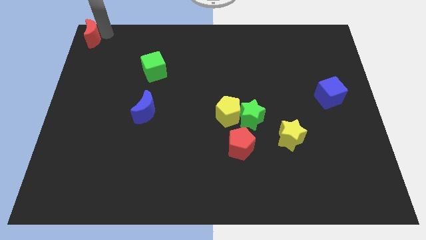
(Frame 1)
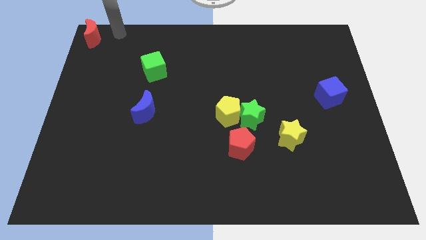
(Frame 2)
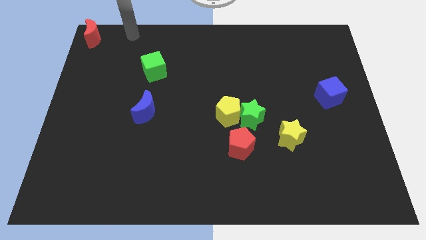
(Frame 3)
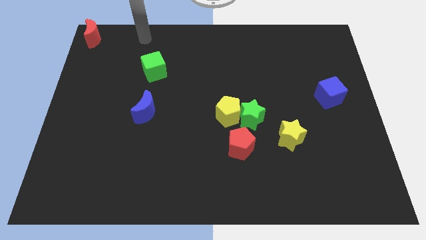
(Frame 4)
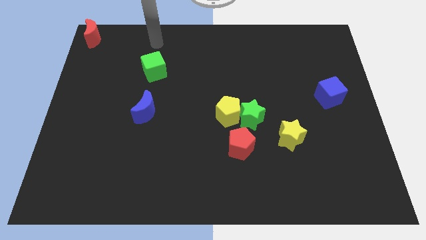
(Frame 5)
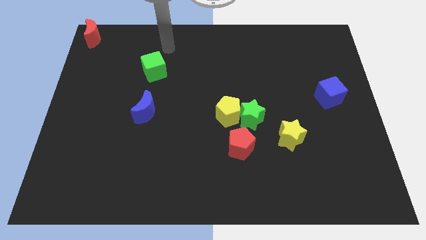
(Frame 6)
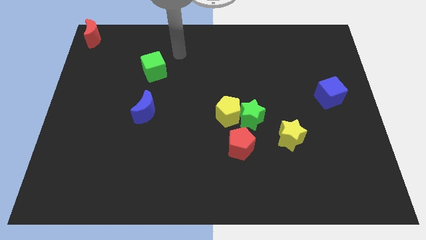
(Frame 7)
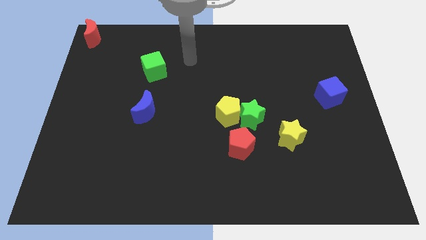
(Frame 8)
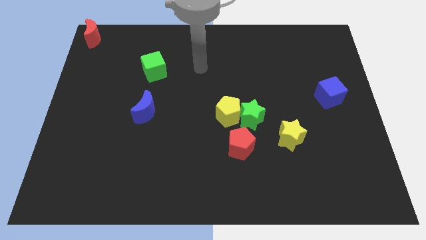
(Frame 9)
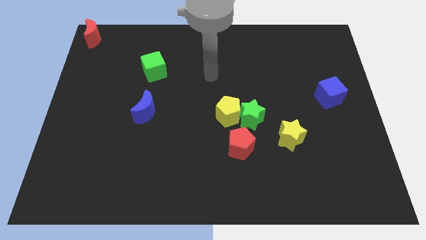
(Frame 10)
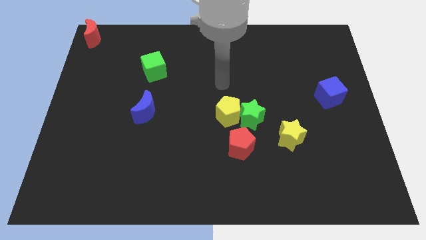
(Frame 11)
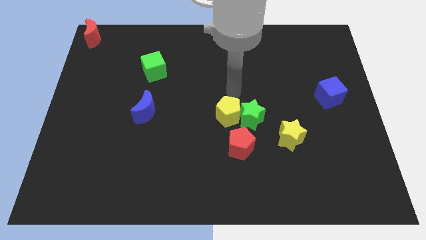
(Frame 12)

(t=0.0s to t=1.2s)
move your arm away from red moon

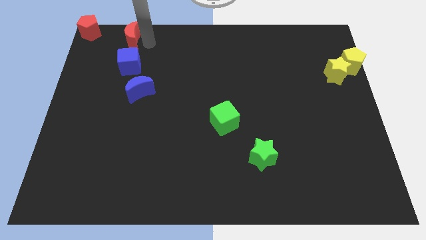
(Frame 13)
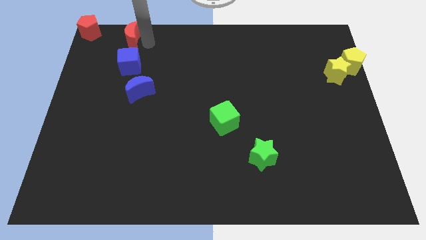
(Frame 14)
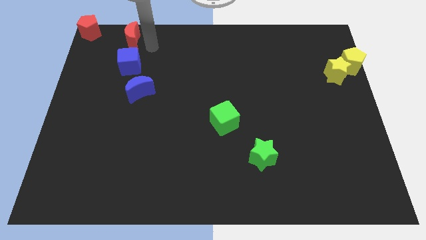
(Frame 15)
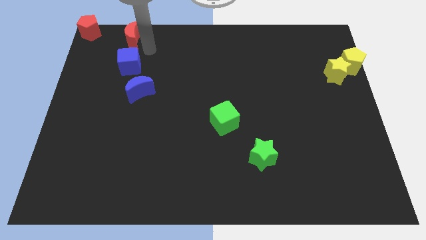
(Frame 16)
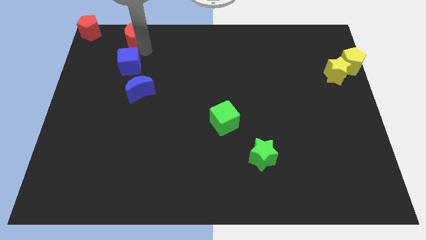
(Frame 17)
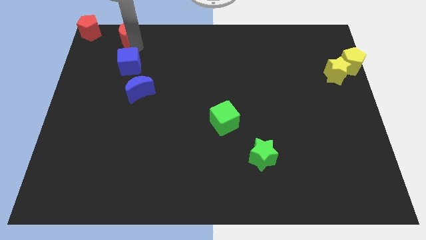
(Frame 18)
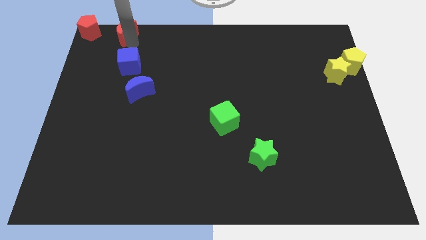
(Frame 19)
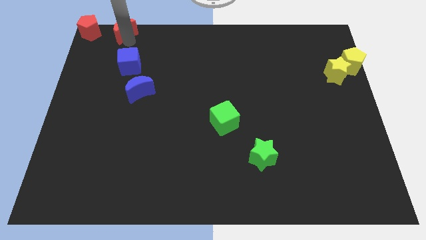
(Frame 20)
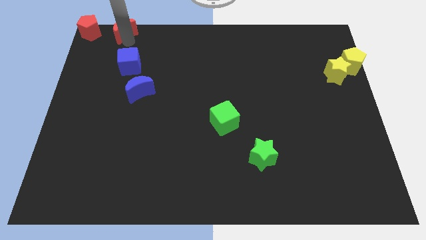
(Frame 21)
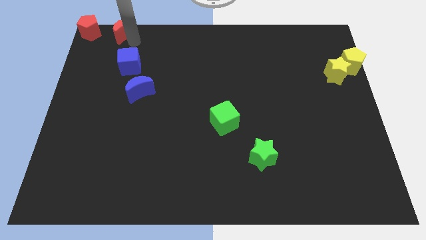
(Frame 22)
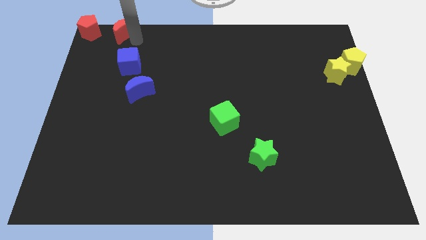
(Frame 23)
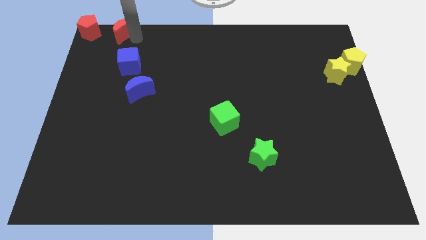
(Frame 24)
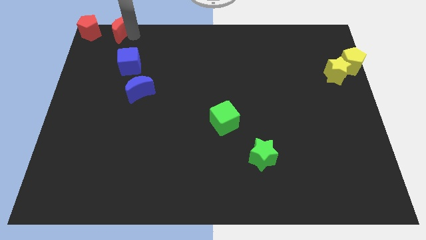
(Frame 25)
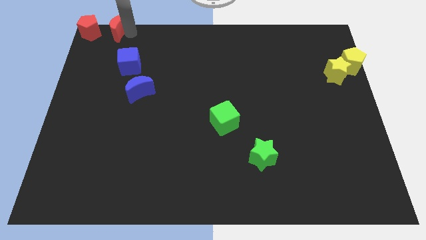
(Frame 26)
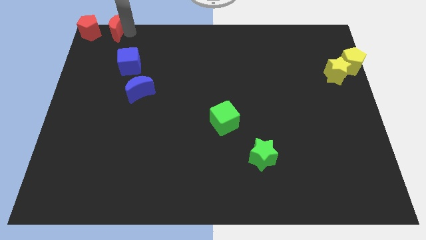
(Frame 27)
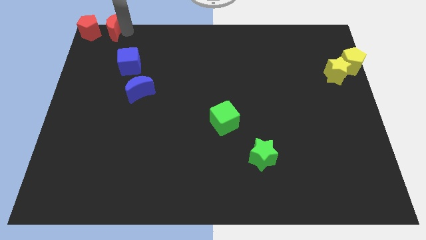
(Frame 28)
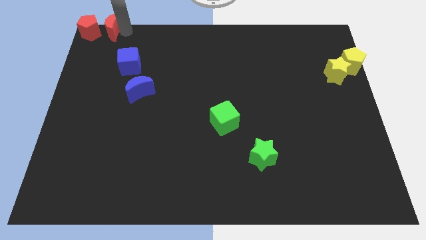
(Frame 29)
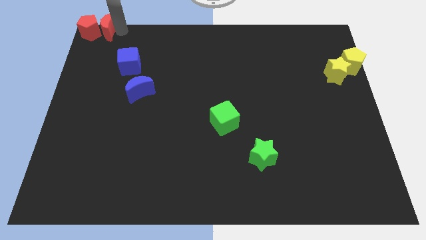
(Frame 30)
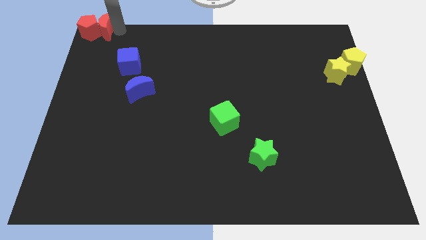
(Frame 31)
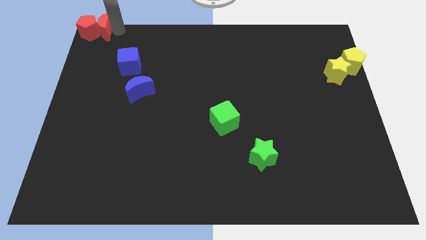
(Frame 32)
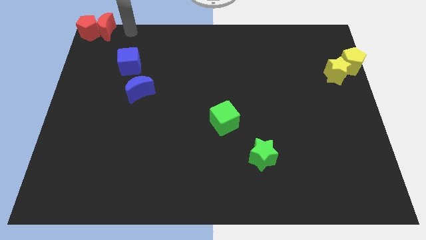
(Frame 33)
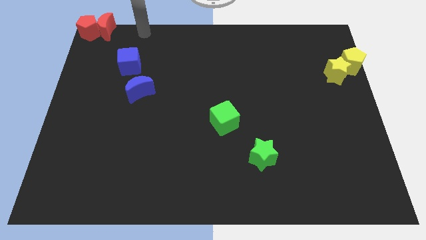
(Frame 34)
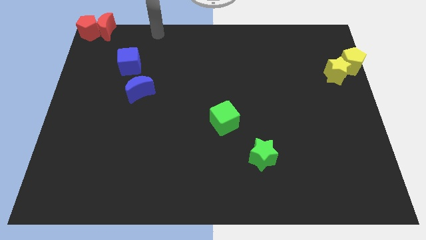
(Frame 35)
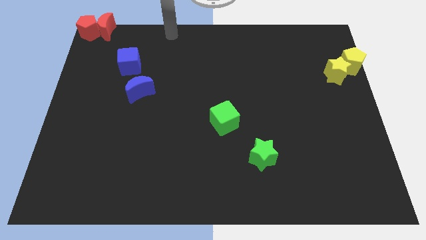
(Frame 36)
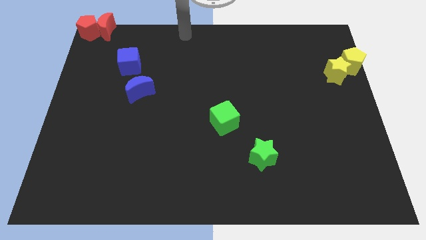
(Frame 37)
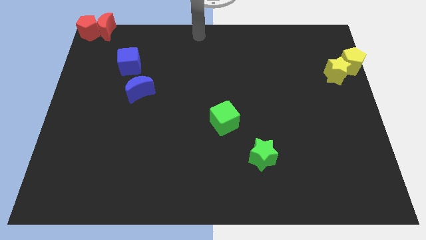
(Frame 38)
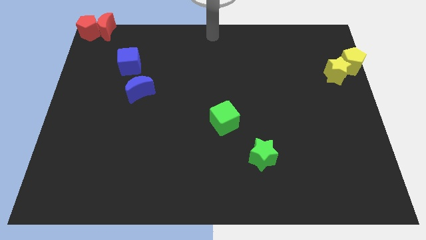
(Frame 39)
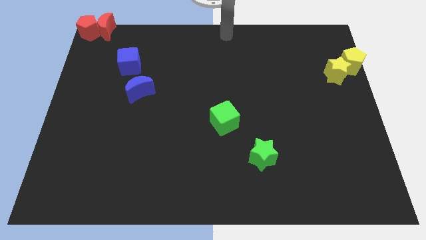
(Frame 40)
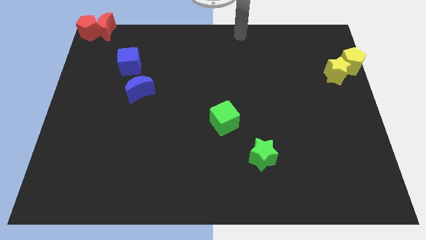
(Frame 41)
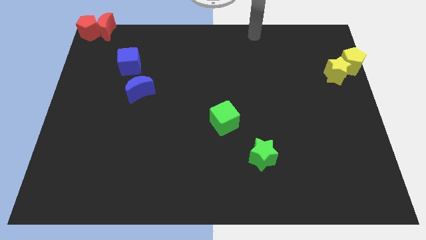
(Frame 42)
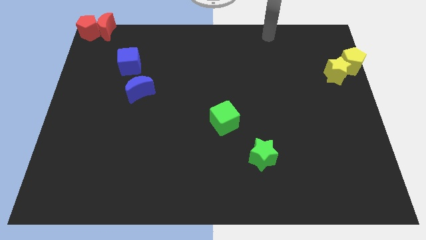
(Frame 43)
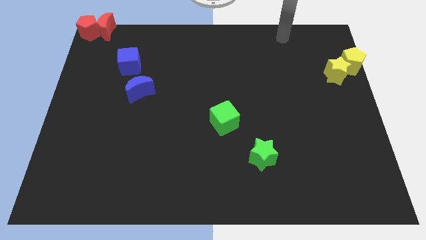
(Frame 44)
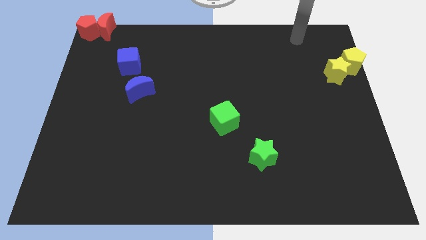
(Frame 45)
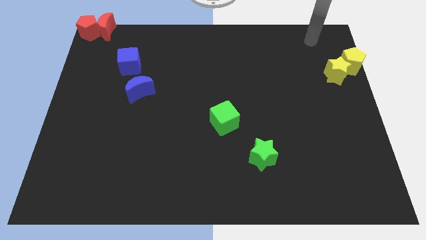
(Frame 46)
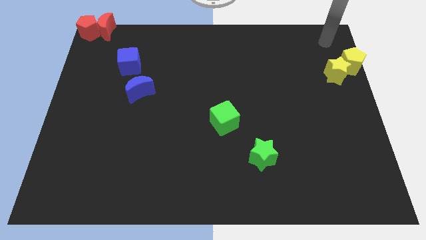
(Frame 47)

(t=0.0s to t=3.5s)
move the red crescent to the right side of the red pentagon

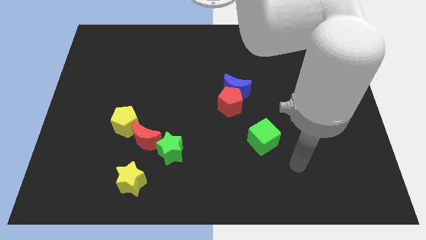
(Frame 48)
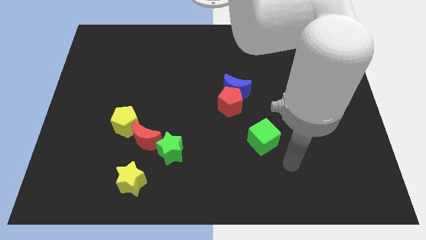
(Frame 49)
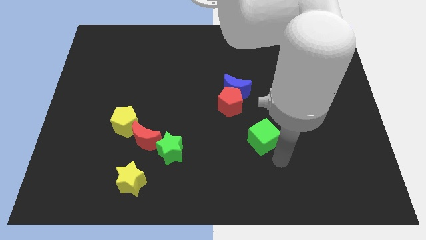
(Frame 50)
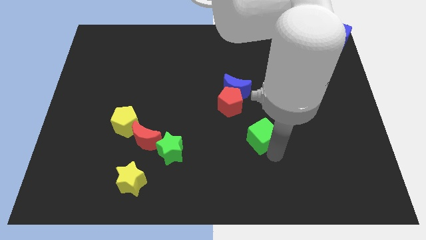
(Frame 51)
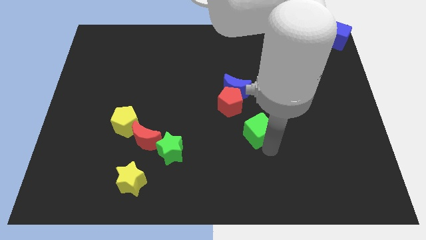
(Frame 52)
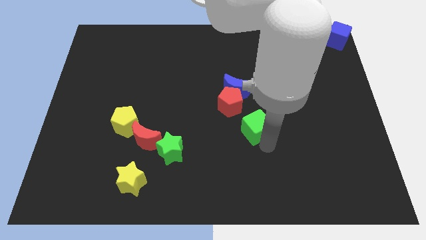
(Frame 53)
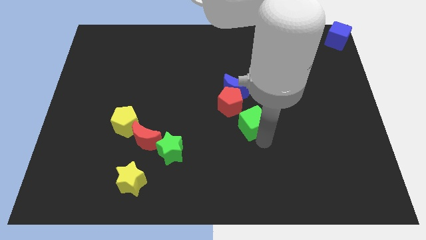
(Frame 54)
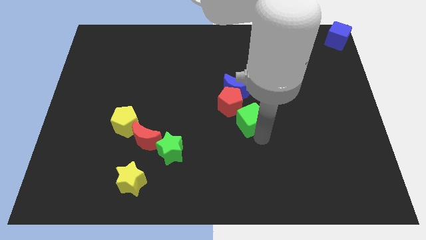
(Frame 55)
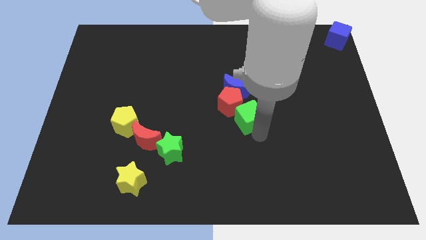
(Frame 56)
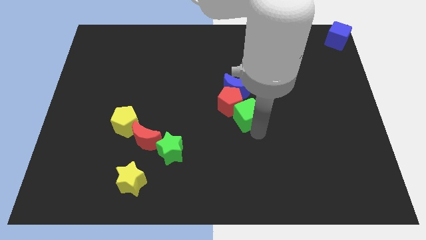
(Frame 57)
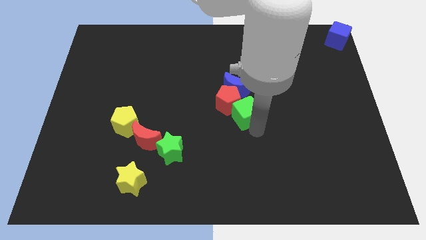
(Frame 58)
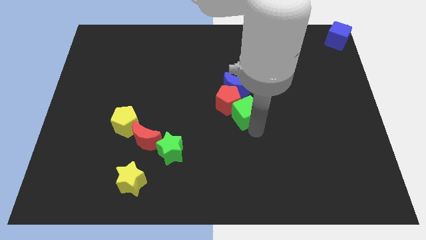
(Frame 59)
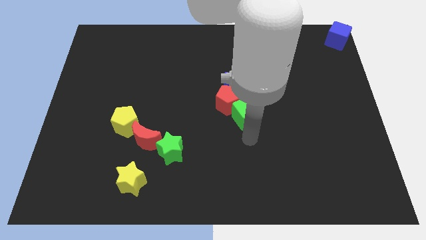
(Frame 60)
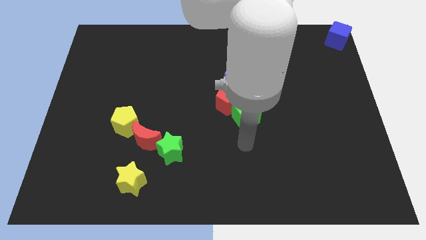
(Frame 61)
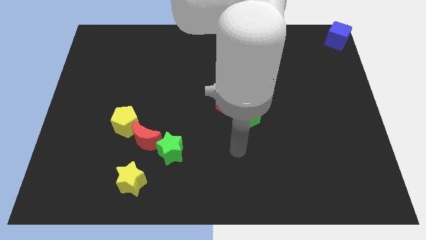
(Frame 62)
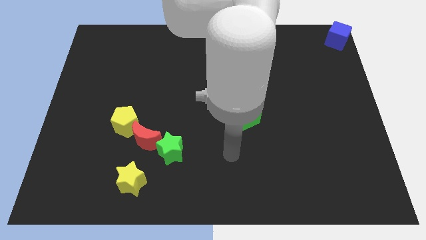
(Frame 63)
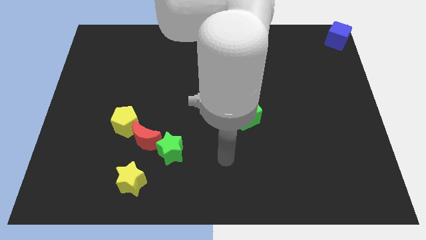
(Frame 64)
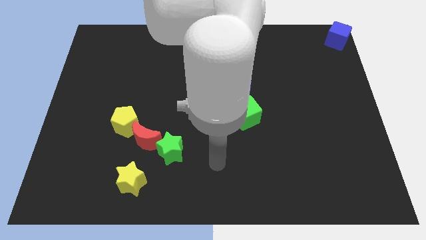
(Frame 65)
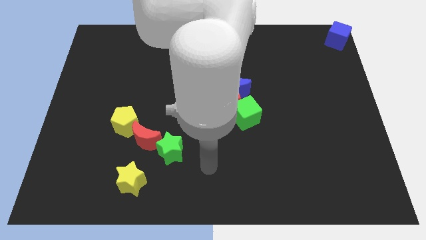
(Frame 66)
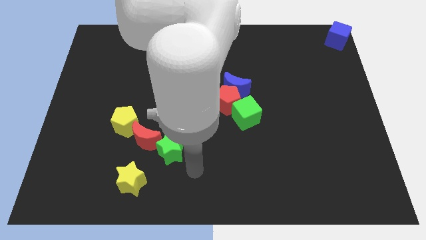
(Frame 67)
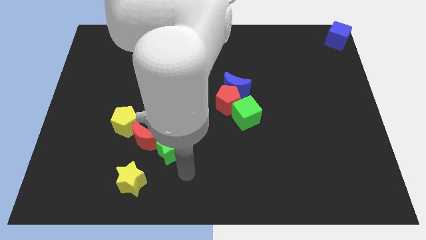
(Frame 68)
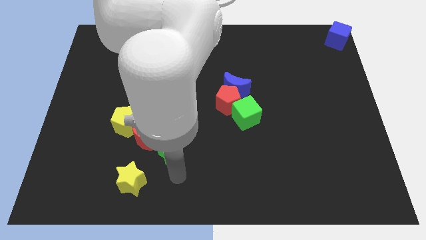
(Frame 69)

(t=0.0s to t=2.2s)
place the green cube at the bottom right side of the red pentagon

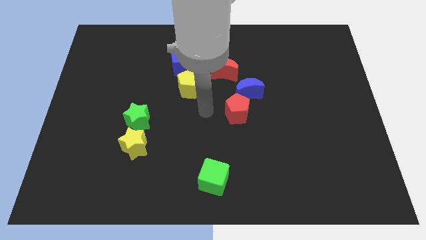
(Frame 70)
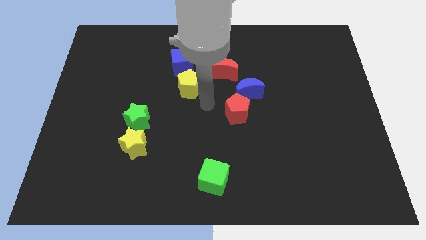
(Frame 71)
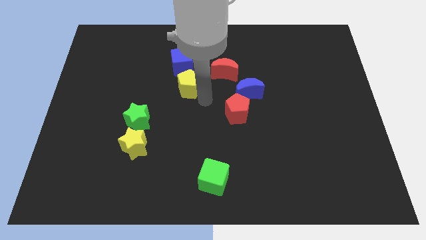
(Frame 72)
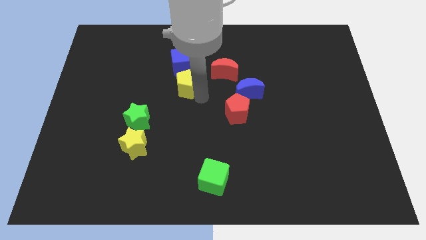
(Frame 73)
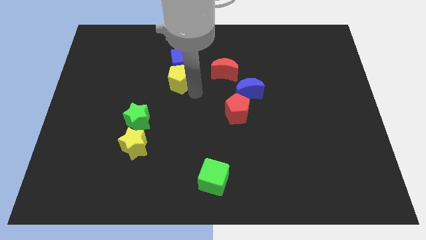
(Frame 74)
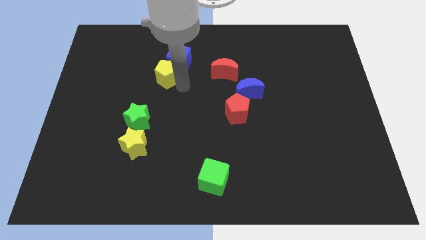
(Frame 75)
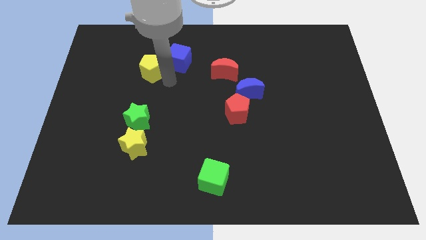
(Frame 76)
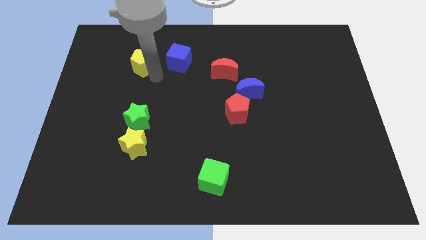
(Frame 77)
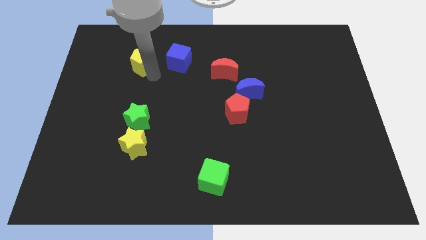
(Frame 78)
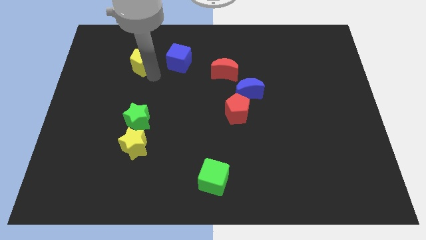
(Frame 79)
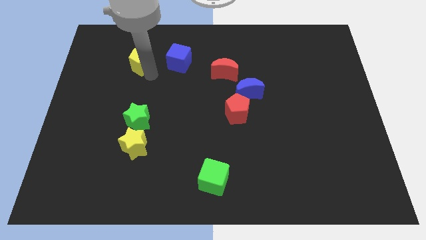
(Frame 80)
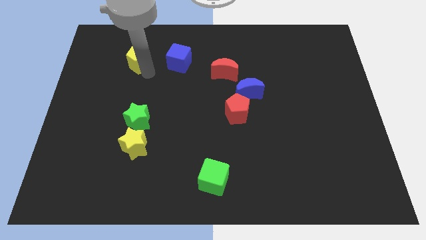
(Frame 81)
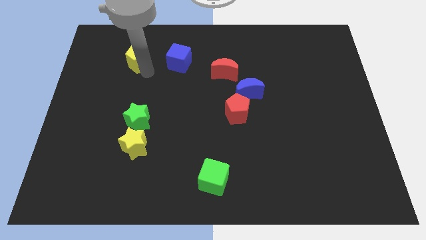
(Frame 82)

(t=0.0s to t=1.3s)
push yellow pentagon above green star

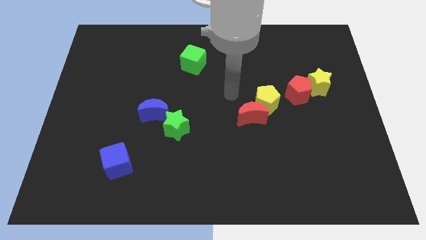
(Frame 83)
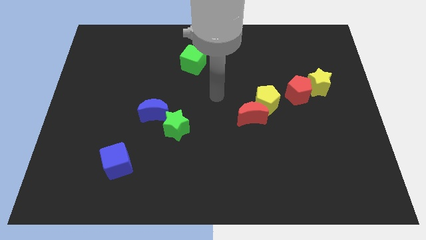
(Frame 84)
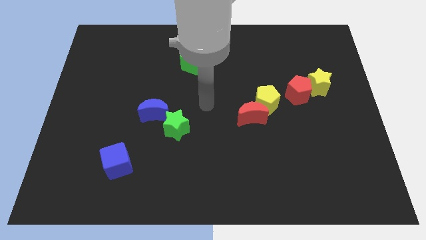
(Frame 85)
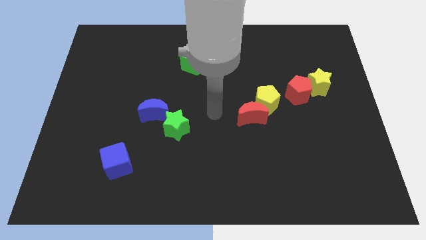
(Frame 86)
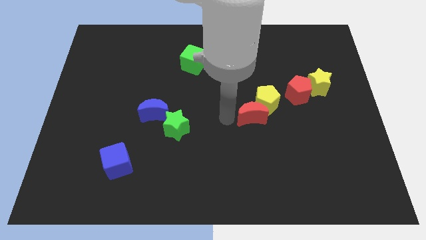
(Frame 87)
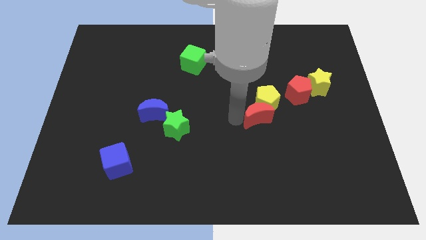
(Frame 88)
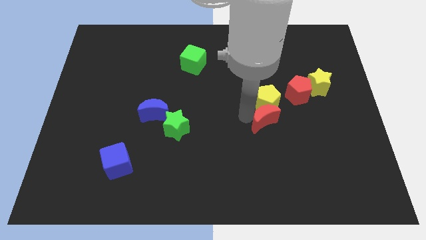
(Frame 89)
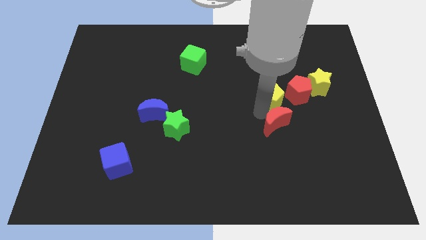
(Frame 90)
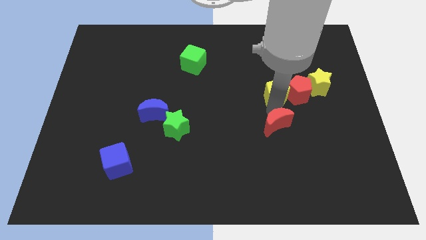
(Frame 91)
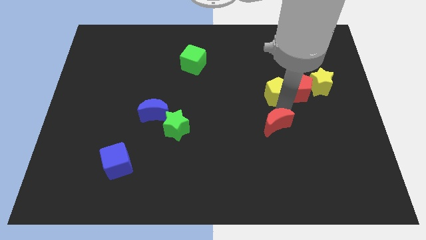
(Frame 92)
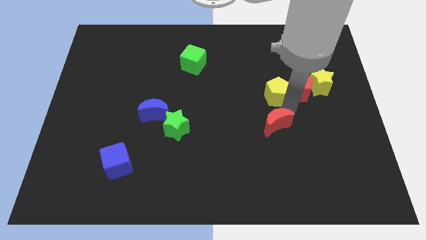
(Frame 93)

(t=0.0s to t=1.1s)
separate the yellow pentagon from the red crescent
